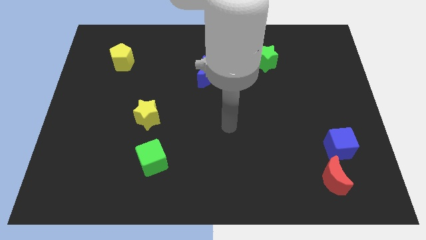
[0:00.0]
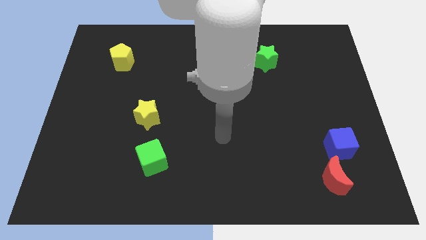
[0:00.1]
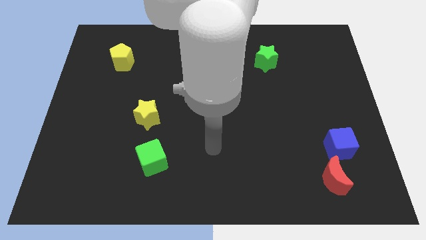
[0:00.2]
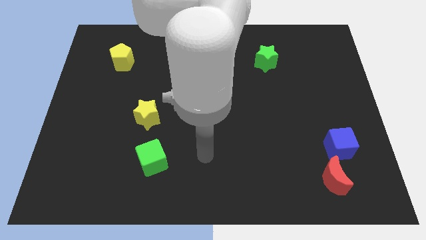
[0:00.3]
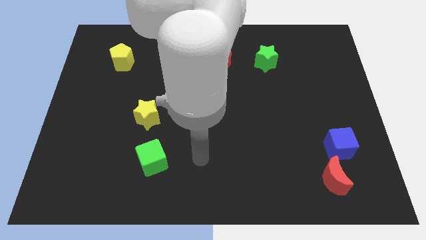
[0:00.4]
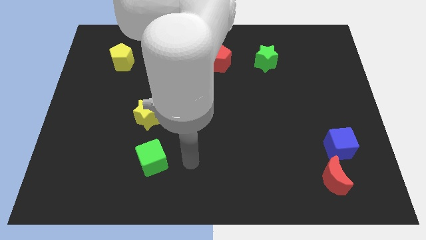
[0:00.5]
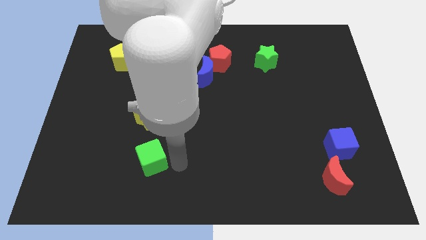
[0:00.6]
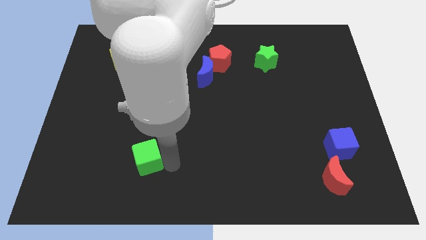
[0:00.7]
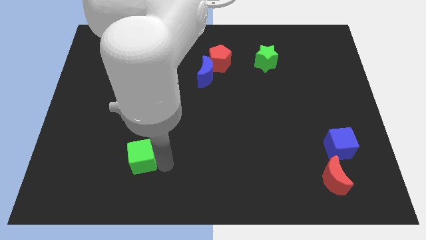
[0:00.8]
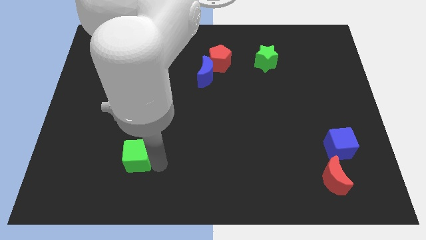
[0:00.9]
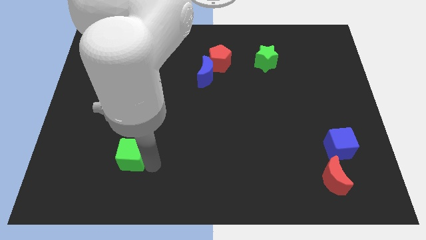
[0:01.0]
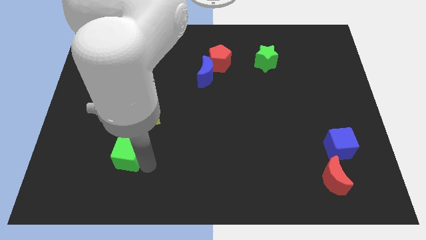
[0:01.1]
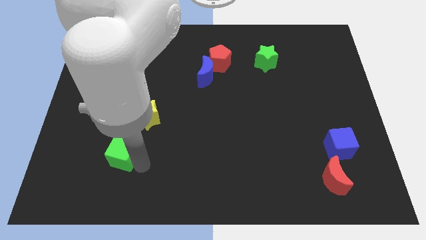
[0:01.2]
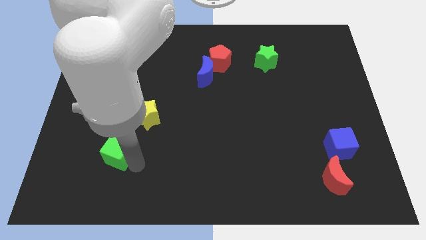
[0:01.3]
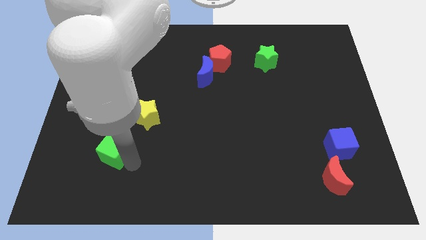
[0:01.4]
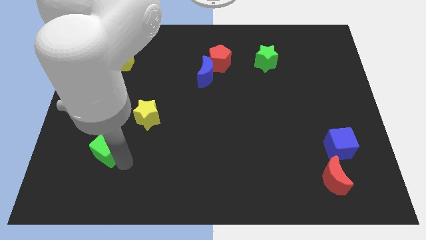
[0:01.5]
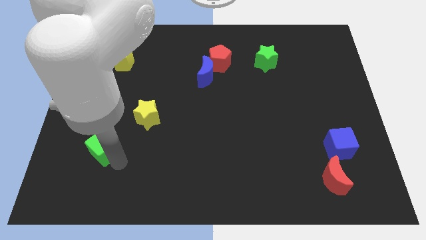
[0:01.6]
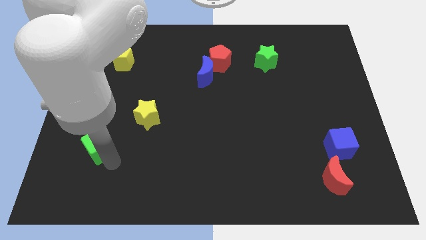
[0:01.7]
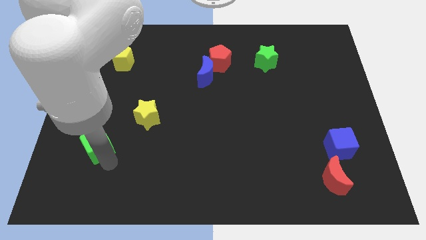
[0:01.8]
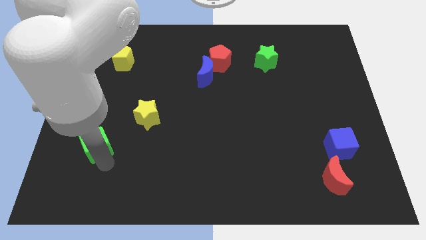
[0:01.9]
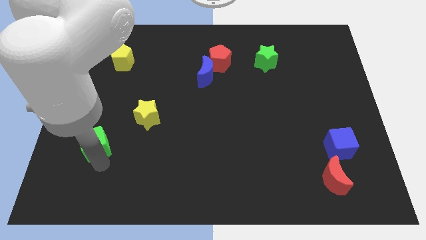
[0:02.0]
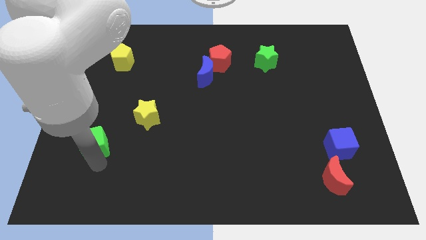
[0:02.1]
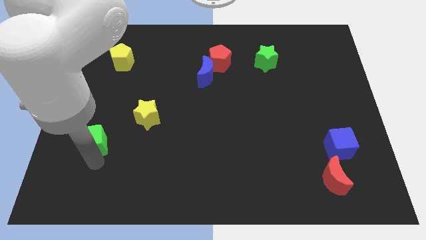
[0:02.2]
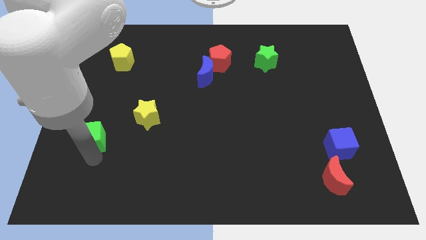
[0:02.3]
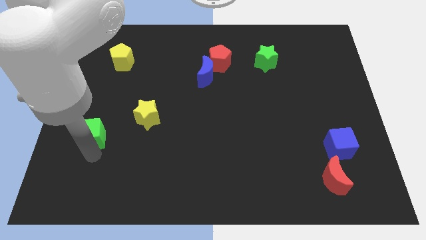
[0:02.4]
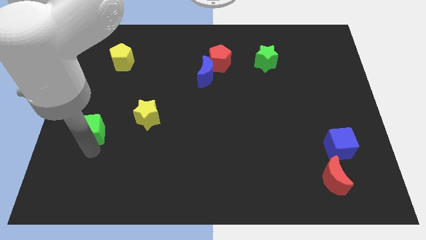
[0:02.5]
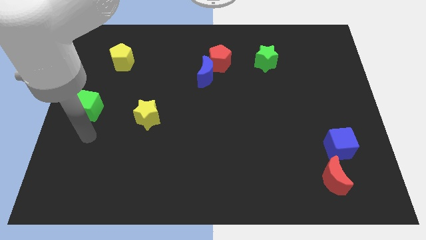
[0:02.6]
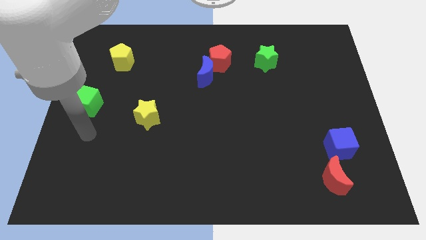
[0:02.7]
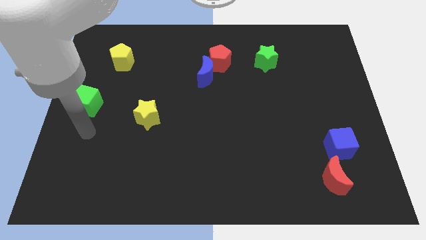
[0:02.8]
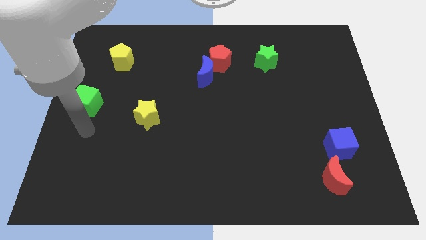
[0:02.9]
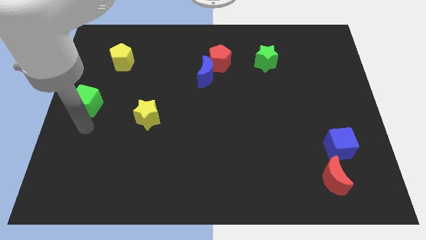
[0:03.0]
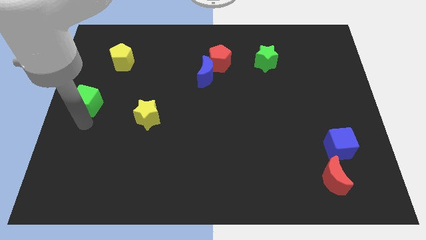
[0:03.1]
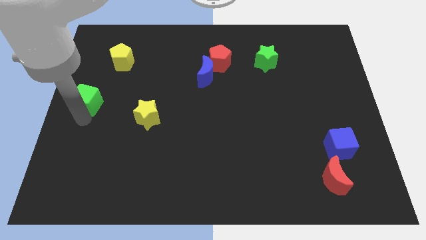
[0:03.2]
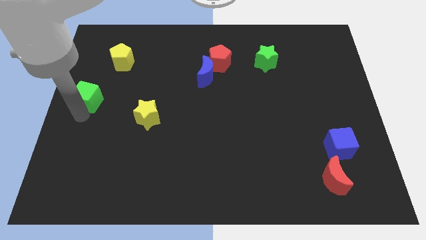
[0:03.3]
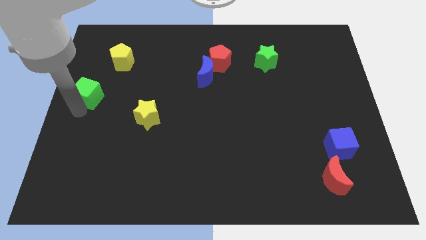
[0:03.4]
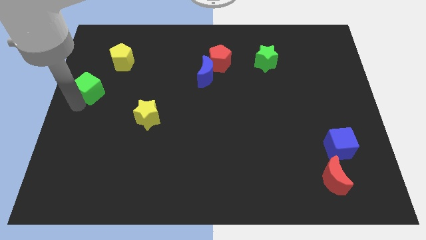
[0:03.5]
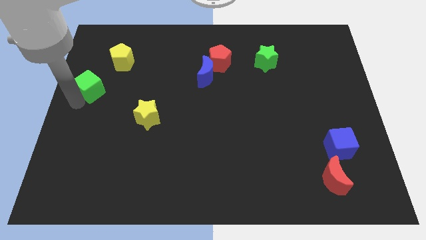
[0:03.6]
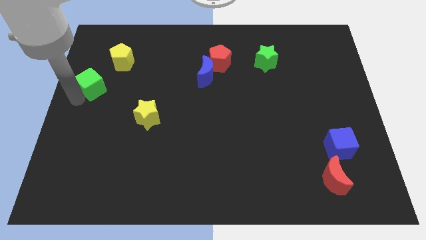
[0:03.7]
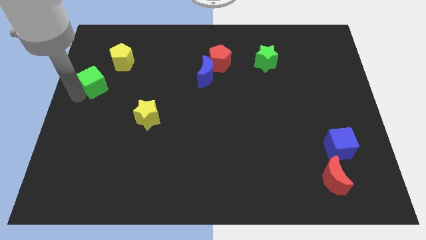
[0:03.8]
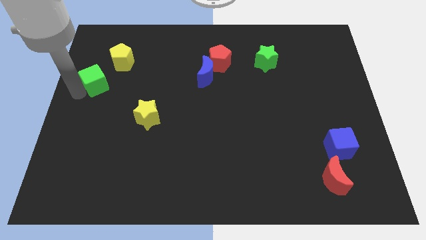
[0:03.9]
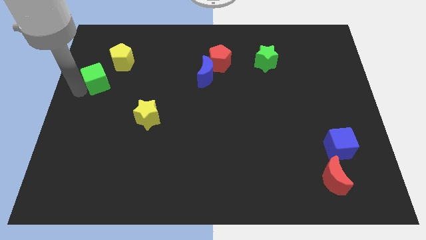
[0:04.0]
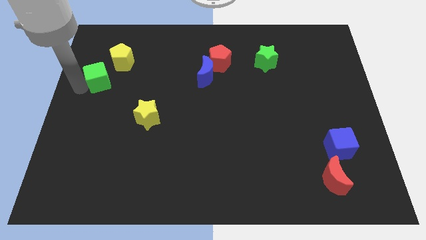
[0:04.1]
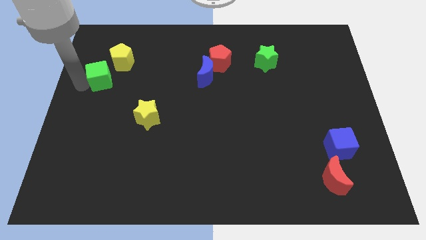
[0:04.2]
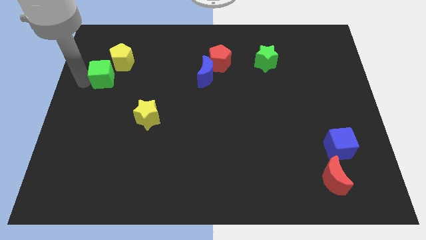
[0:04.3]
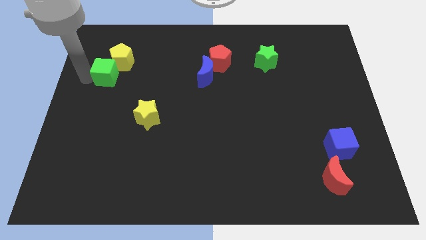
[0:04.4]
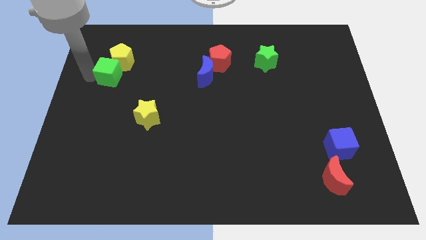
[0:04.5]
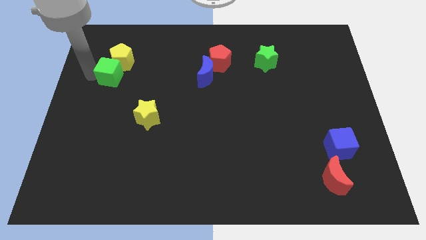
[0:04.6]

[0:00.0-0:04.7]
move the green cube towards the yellow pentagon

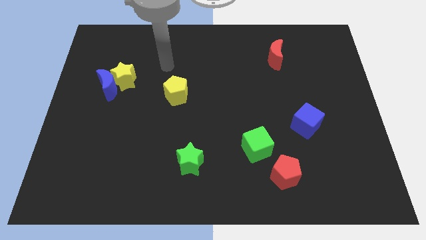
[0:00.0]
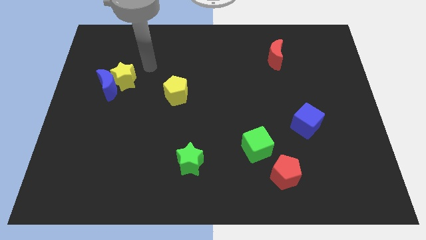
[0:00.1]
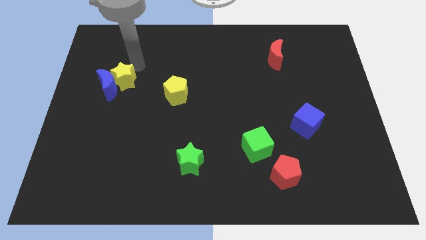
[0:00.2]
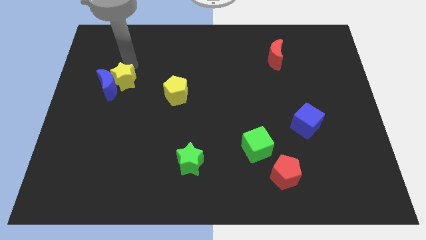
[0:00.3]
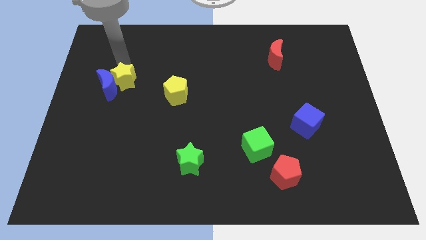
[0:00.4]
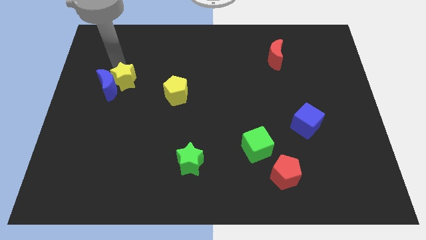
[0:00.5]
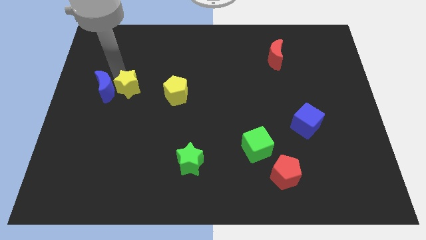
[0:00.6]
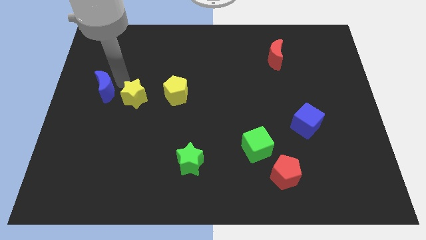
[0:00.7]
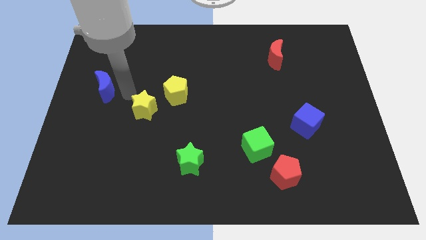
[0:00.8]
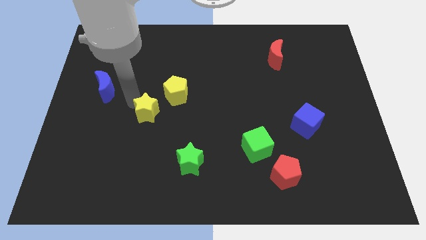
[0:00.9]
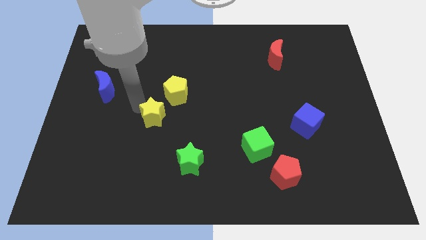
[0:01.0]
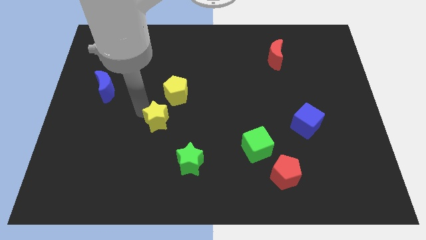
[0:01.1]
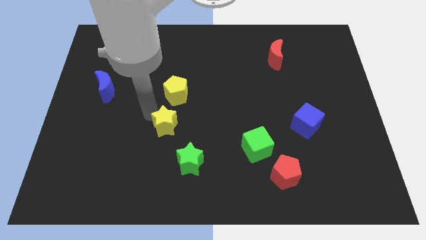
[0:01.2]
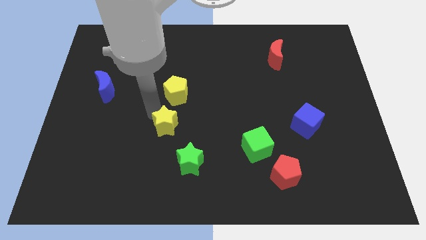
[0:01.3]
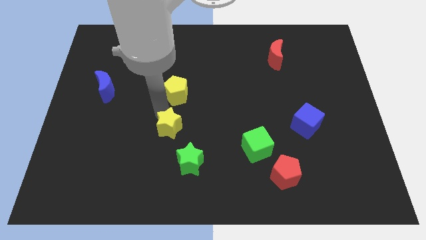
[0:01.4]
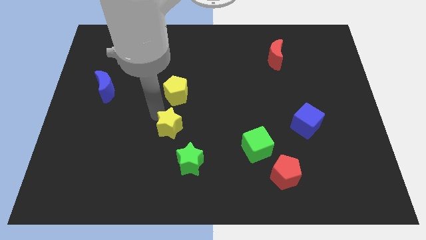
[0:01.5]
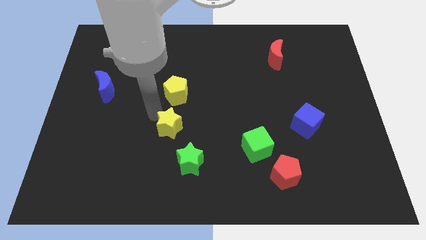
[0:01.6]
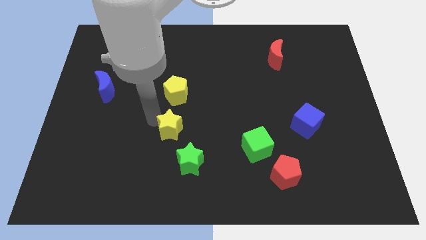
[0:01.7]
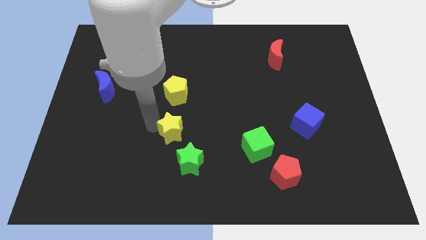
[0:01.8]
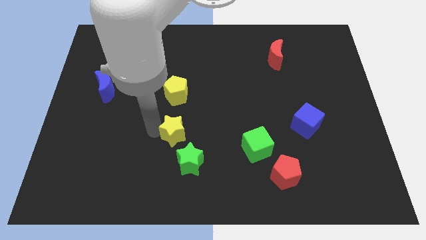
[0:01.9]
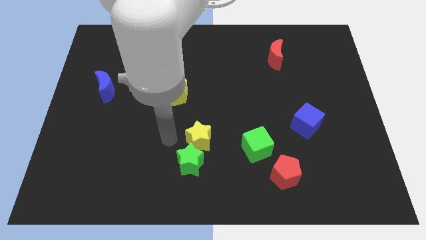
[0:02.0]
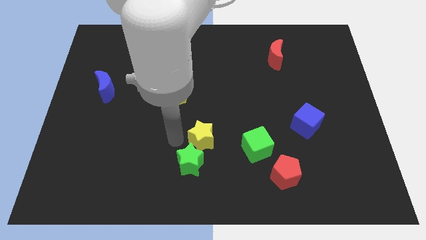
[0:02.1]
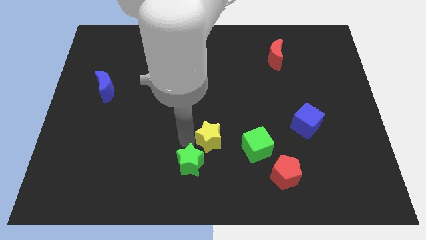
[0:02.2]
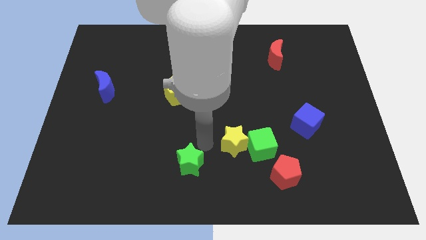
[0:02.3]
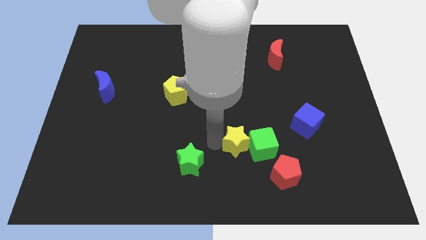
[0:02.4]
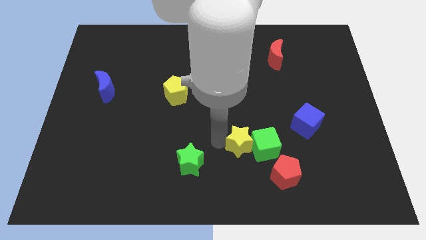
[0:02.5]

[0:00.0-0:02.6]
slide the yellow star towards the green cube

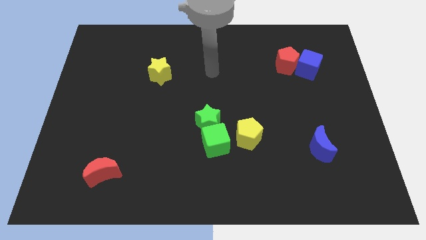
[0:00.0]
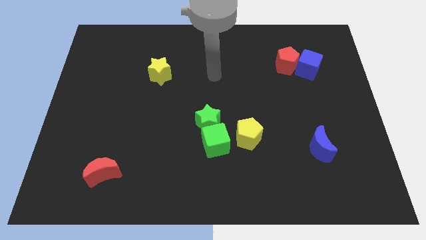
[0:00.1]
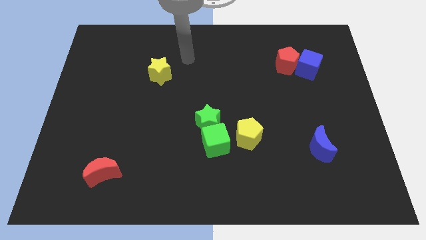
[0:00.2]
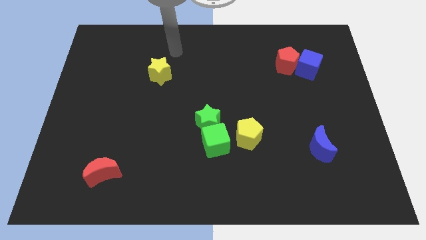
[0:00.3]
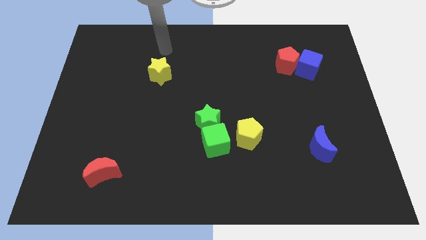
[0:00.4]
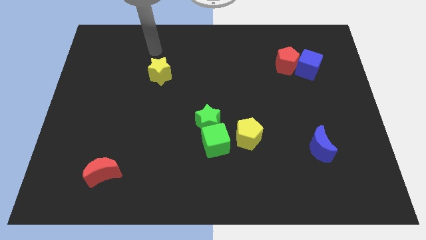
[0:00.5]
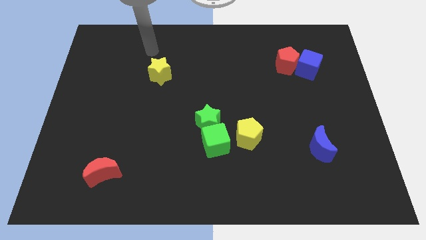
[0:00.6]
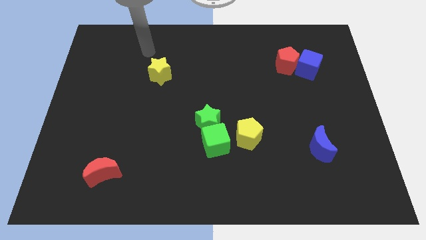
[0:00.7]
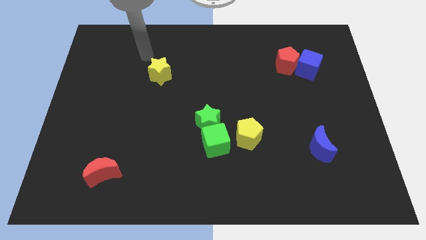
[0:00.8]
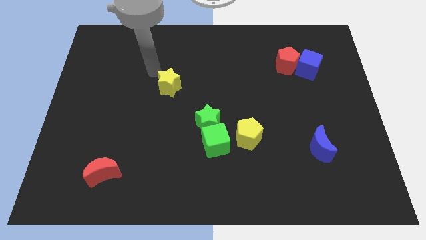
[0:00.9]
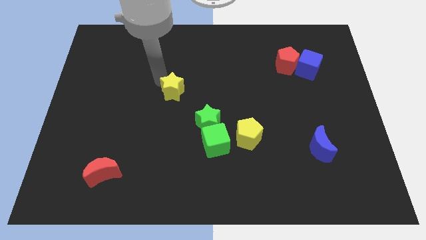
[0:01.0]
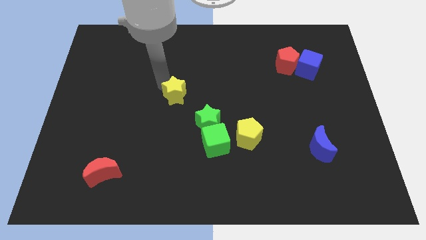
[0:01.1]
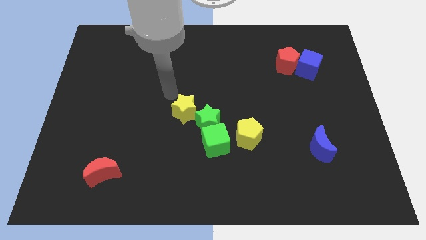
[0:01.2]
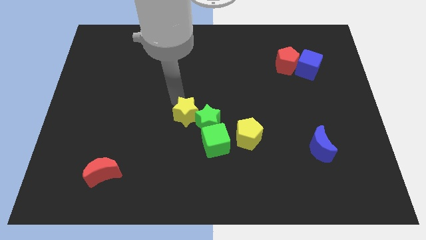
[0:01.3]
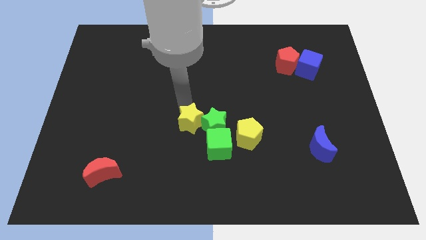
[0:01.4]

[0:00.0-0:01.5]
slide the yellow star next to the green star
